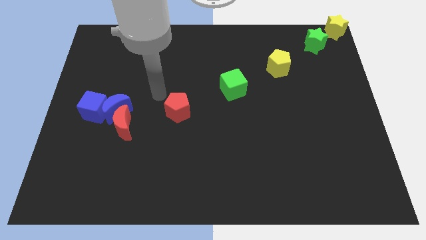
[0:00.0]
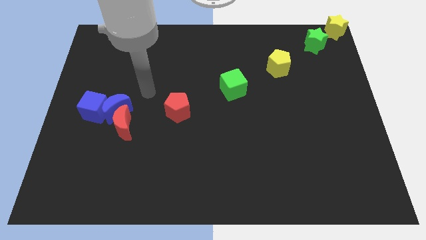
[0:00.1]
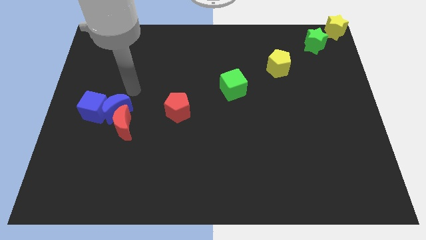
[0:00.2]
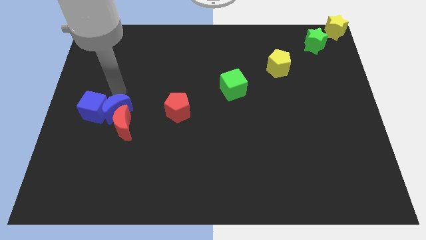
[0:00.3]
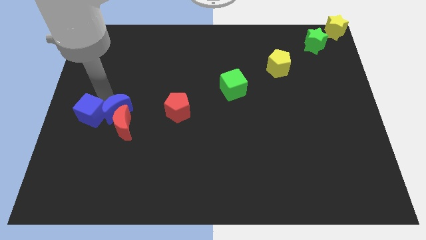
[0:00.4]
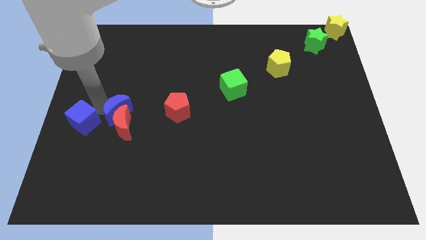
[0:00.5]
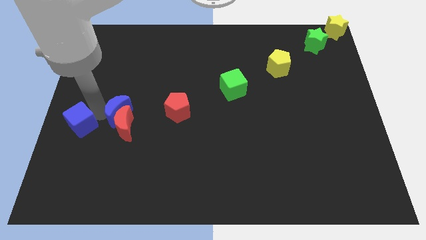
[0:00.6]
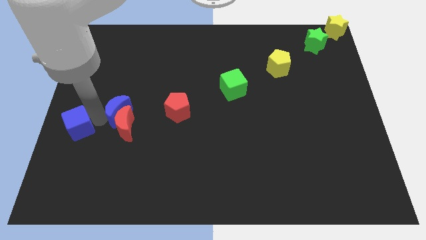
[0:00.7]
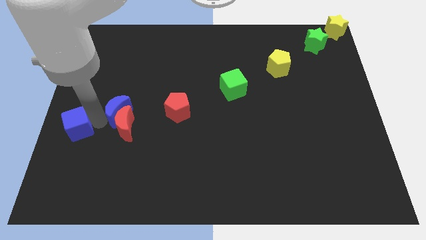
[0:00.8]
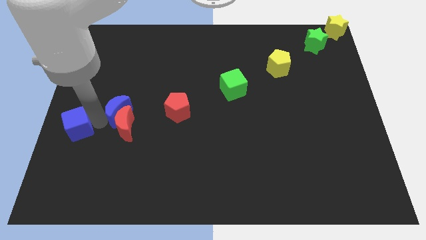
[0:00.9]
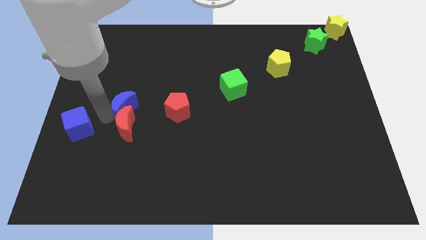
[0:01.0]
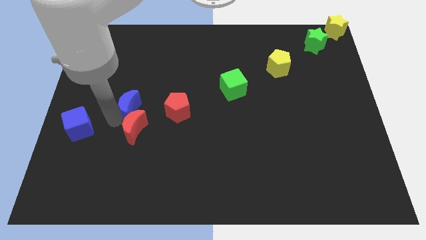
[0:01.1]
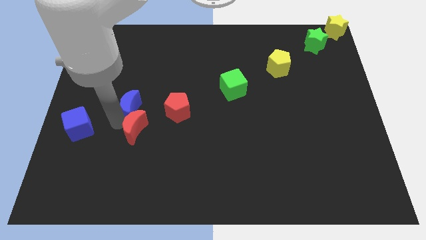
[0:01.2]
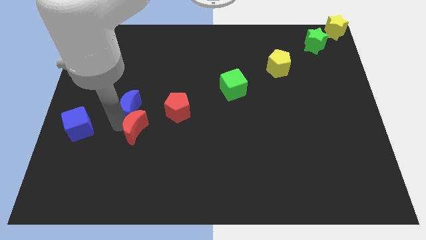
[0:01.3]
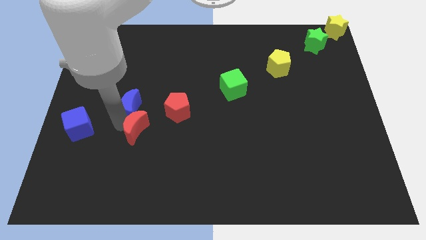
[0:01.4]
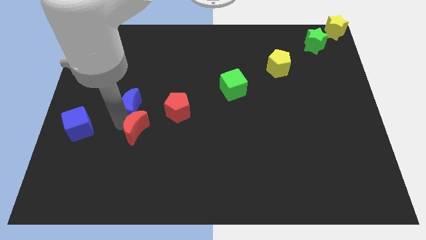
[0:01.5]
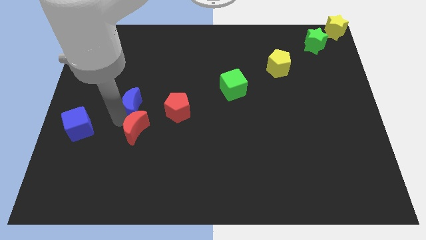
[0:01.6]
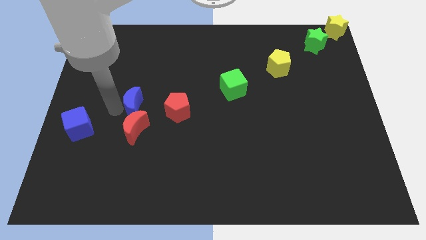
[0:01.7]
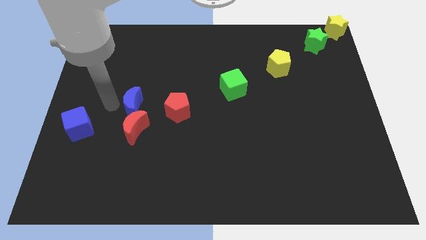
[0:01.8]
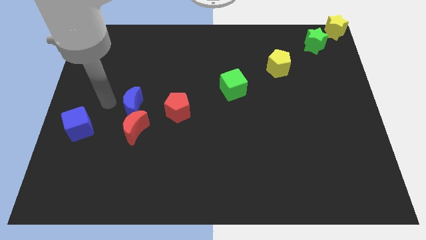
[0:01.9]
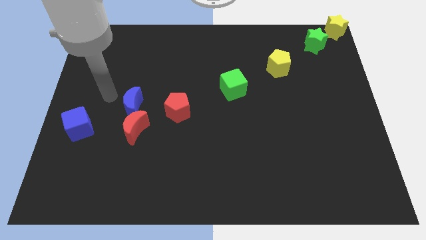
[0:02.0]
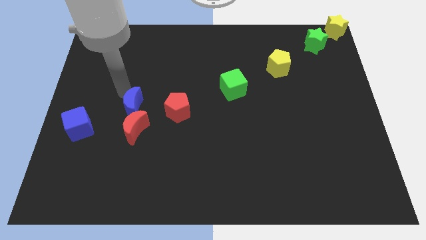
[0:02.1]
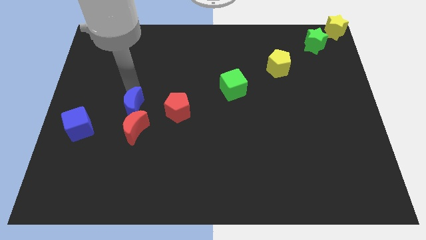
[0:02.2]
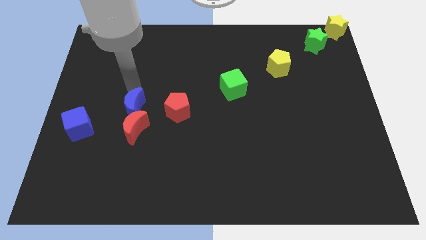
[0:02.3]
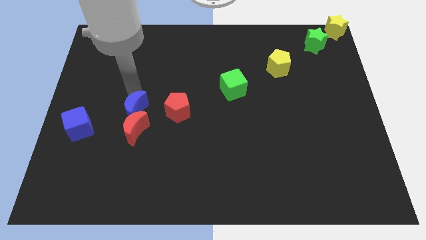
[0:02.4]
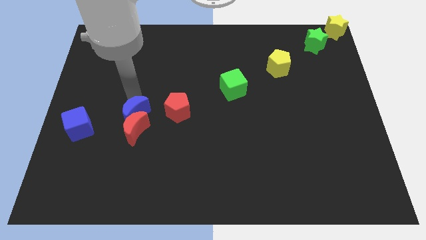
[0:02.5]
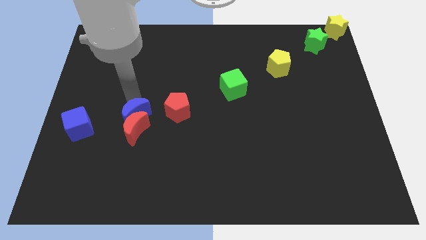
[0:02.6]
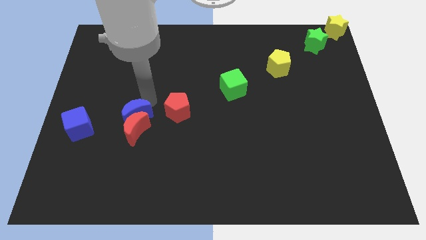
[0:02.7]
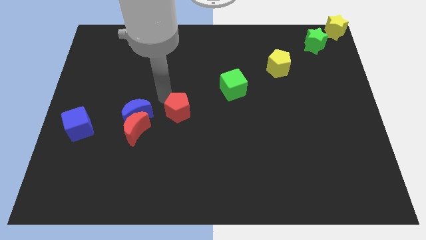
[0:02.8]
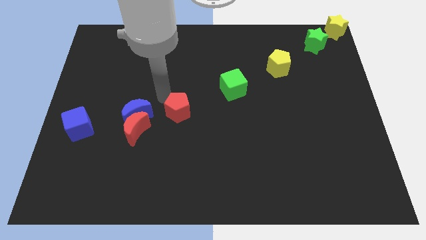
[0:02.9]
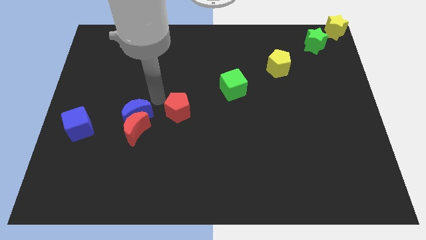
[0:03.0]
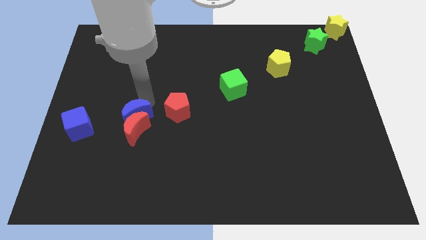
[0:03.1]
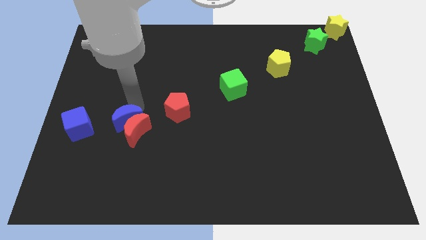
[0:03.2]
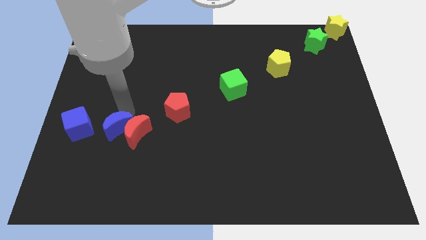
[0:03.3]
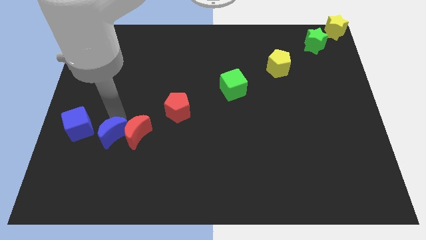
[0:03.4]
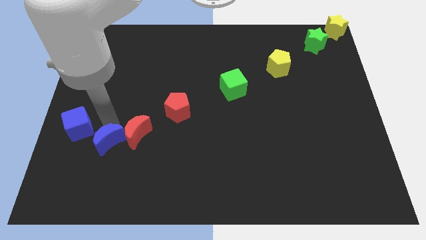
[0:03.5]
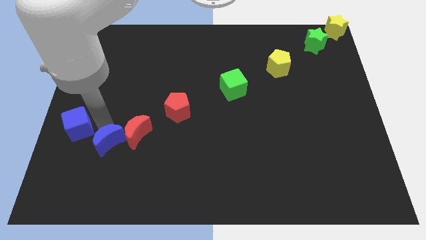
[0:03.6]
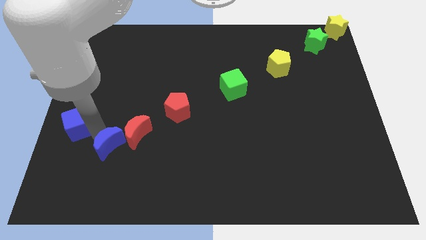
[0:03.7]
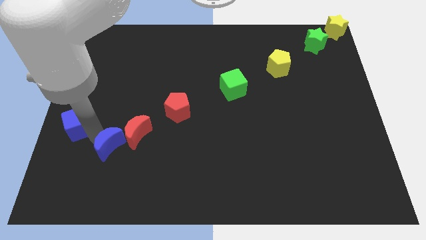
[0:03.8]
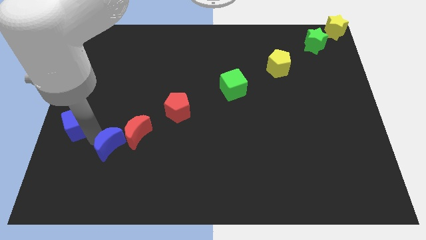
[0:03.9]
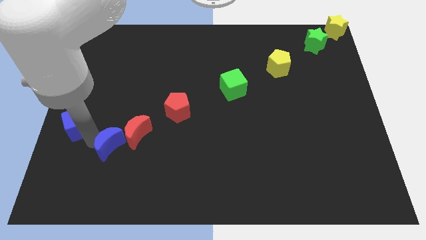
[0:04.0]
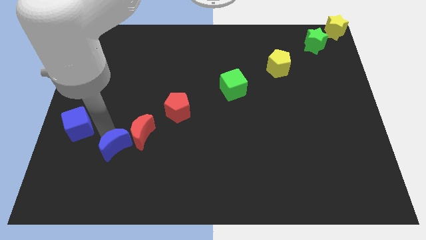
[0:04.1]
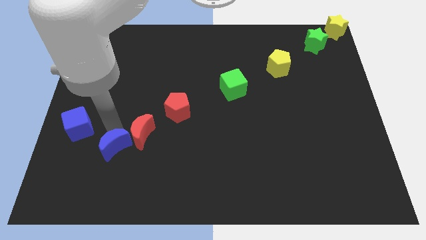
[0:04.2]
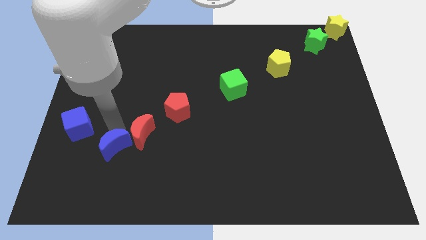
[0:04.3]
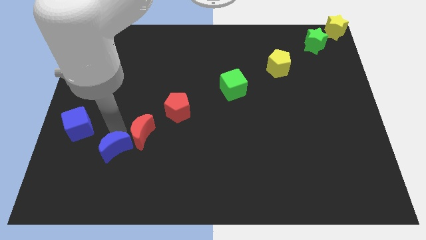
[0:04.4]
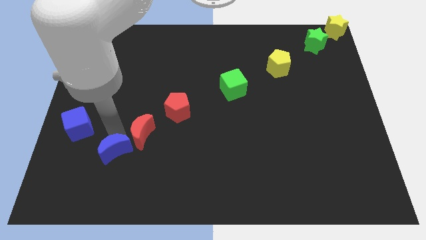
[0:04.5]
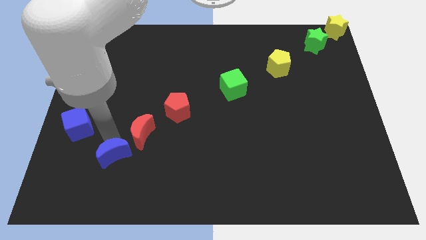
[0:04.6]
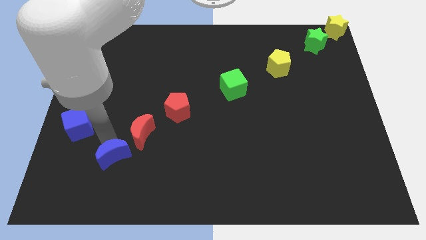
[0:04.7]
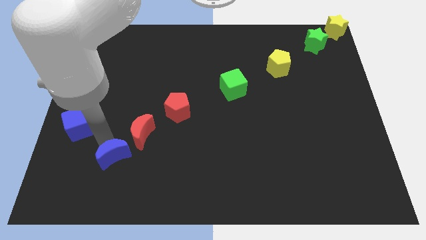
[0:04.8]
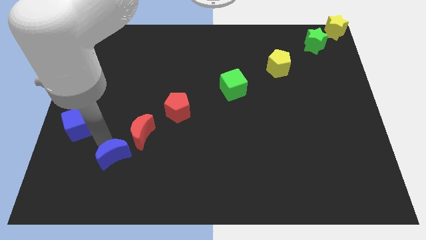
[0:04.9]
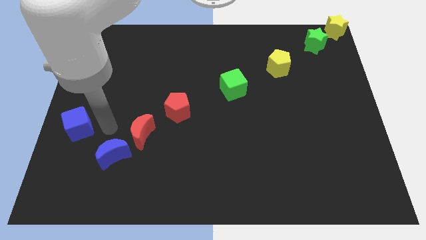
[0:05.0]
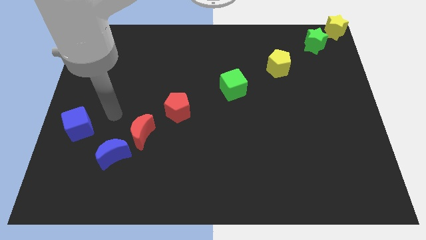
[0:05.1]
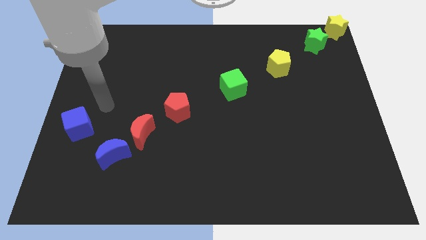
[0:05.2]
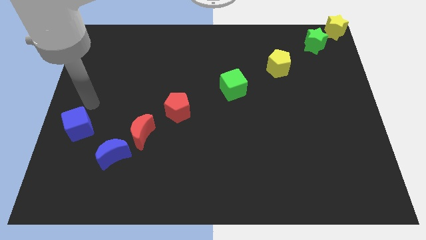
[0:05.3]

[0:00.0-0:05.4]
separate the blue moon from red moon to make a row

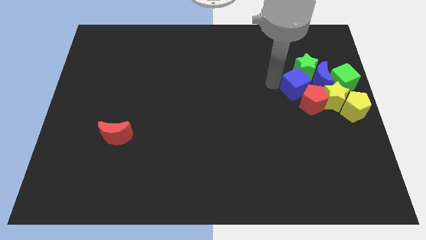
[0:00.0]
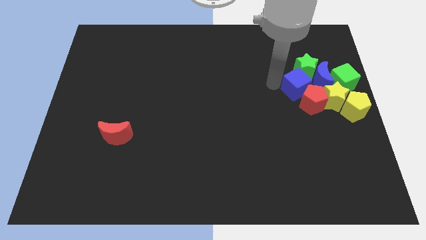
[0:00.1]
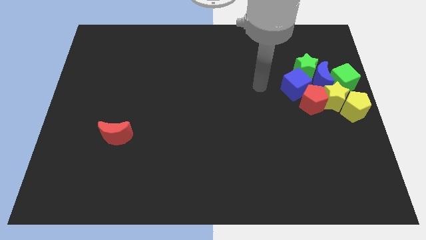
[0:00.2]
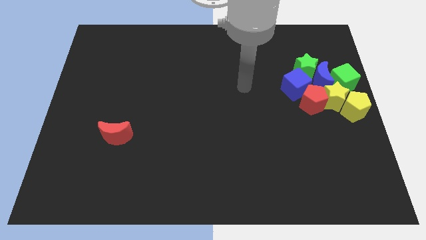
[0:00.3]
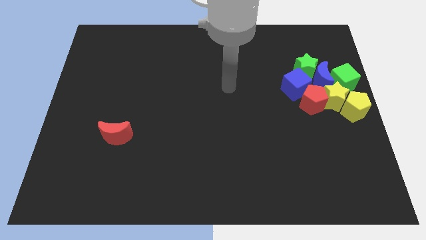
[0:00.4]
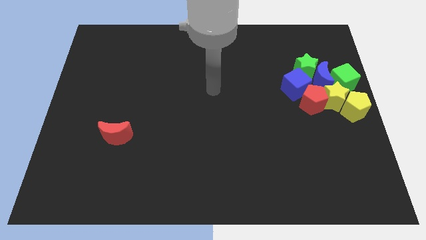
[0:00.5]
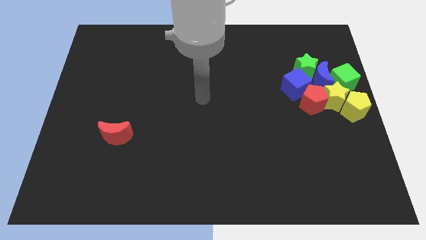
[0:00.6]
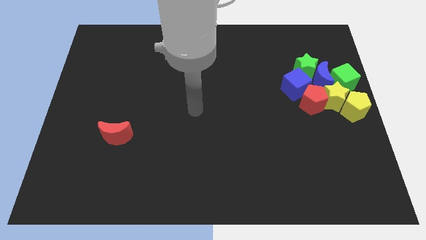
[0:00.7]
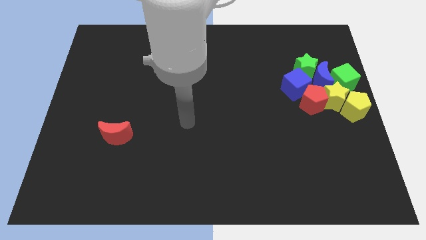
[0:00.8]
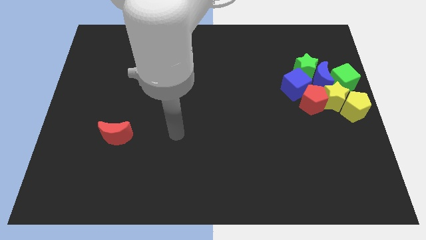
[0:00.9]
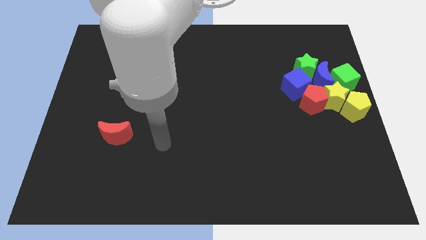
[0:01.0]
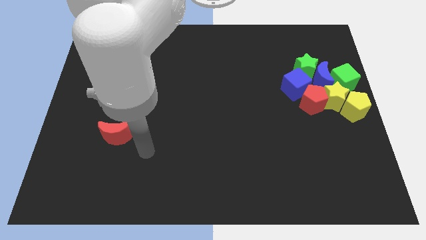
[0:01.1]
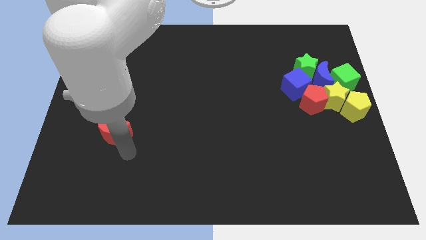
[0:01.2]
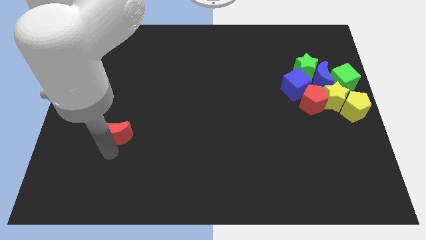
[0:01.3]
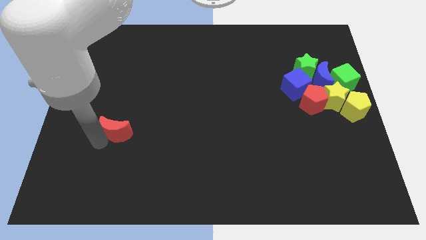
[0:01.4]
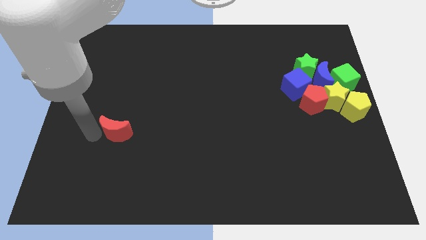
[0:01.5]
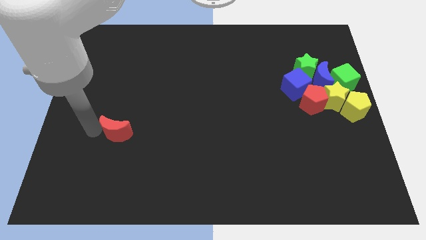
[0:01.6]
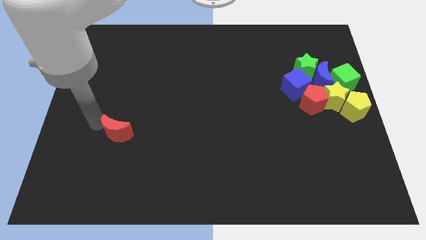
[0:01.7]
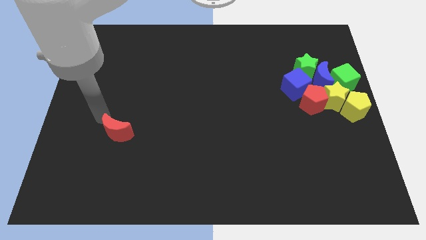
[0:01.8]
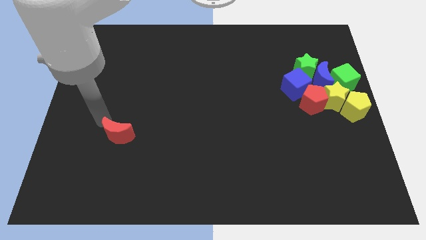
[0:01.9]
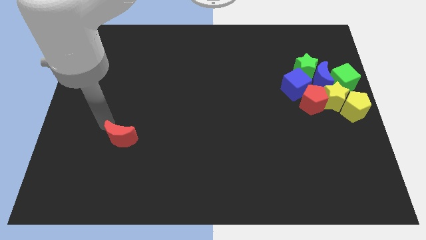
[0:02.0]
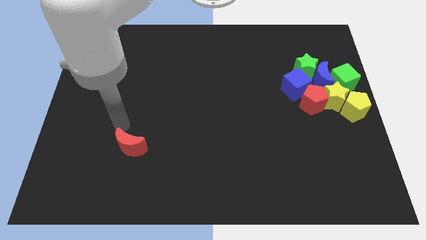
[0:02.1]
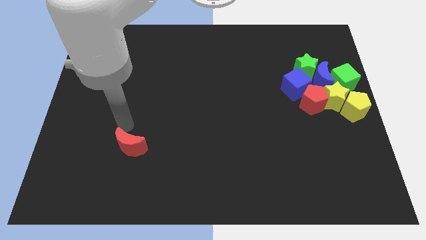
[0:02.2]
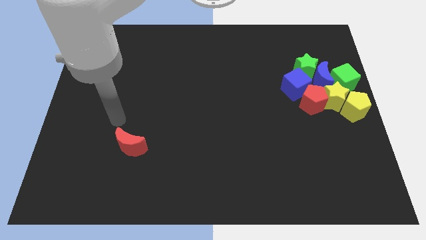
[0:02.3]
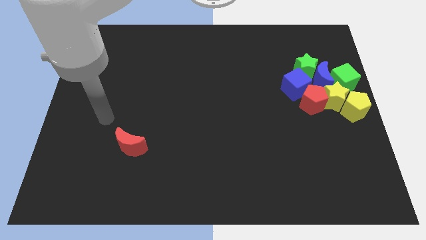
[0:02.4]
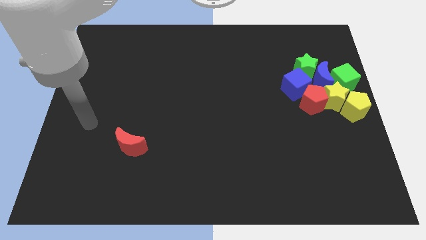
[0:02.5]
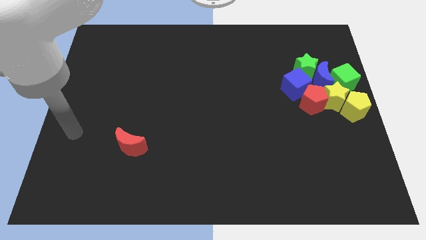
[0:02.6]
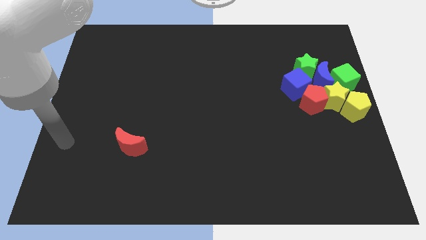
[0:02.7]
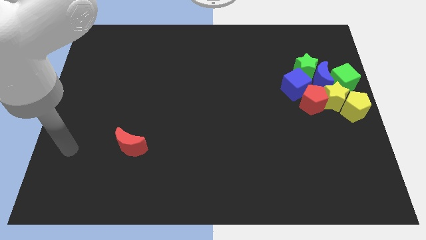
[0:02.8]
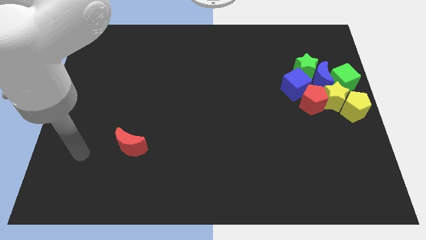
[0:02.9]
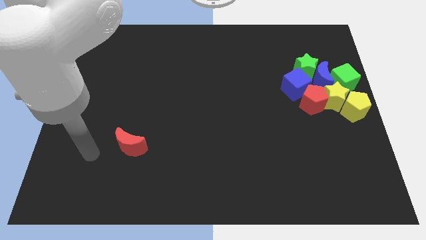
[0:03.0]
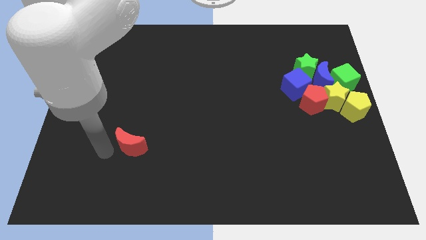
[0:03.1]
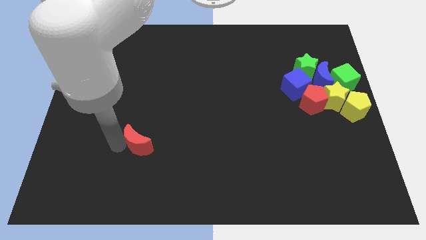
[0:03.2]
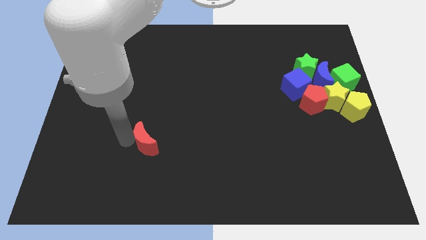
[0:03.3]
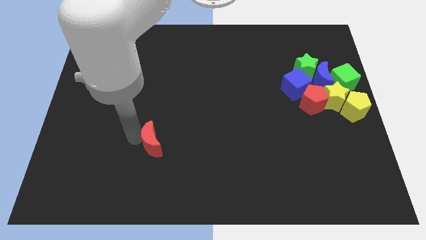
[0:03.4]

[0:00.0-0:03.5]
tap the red crescent
